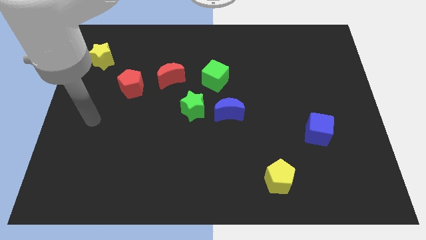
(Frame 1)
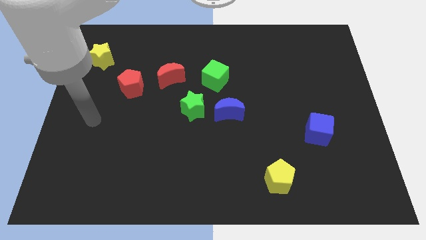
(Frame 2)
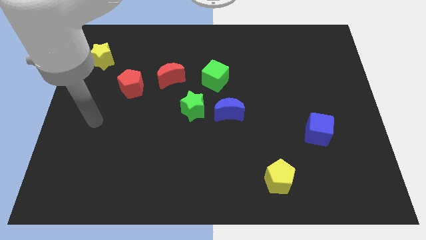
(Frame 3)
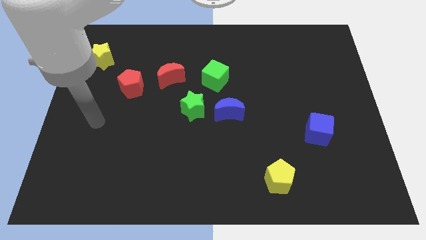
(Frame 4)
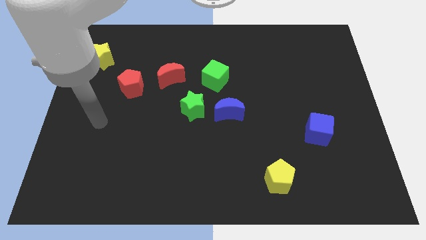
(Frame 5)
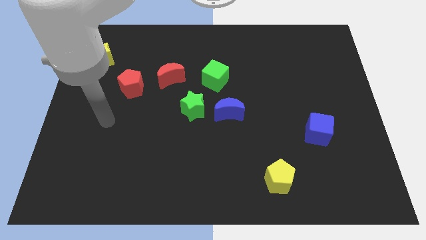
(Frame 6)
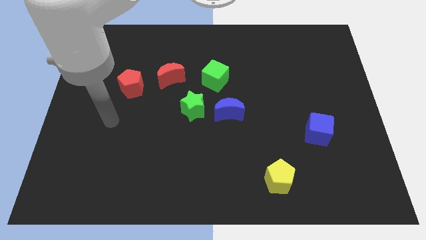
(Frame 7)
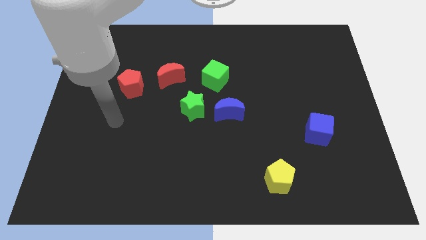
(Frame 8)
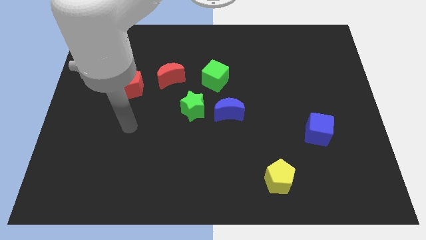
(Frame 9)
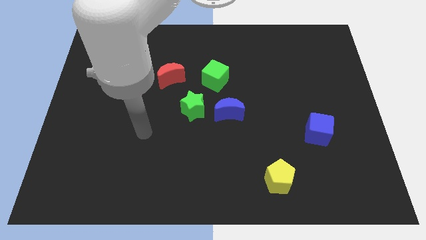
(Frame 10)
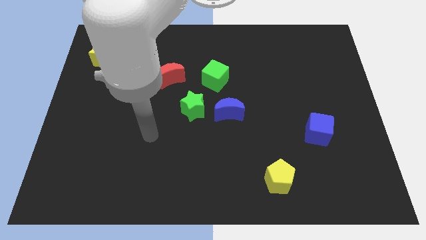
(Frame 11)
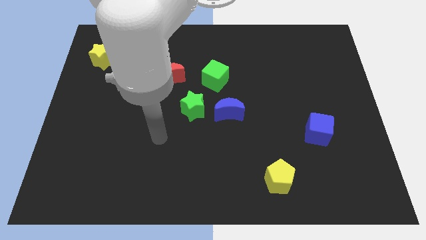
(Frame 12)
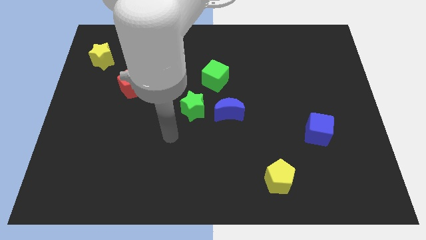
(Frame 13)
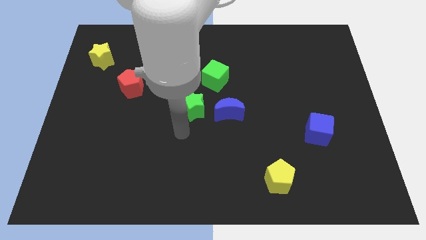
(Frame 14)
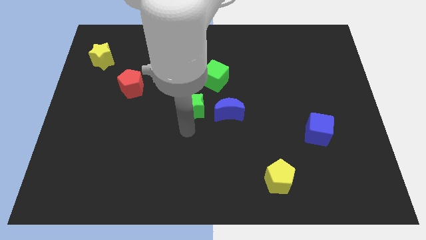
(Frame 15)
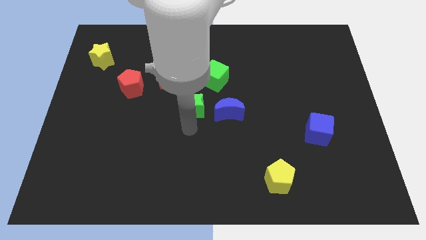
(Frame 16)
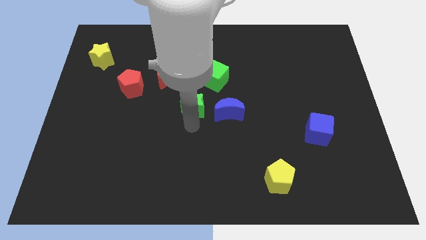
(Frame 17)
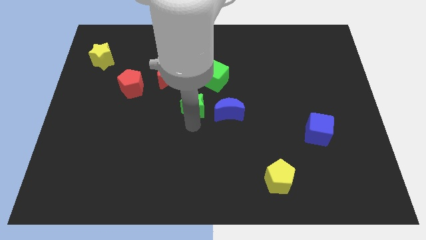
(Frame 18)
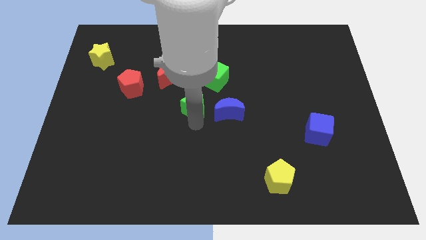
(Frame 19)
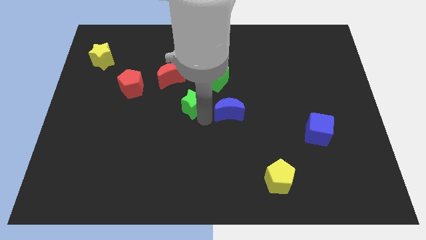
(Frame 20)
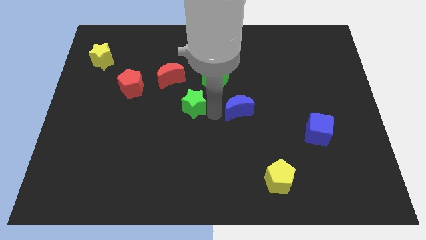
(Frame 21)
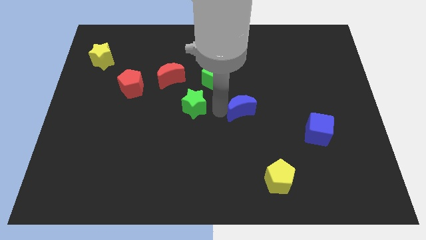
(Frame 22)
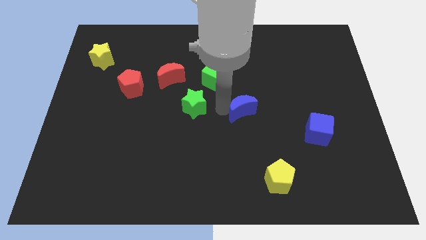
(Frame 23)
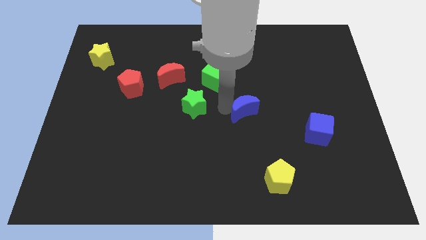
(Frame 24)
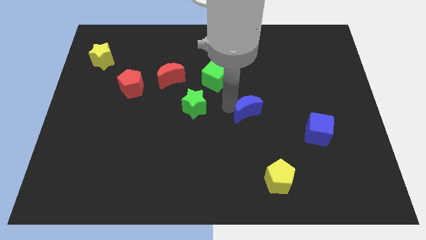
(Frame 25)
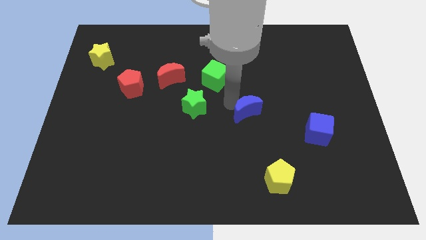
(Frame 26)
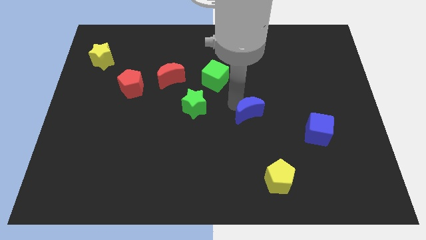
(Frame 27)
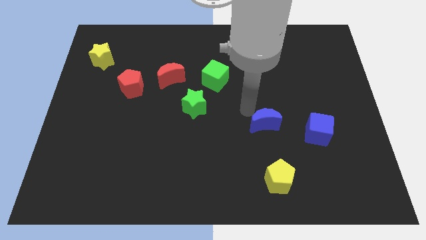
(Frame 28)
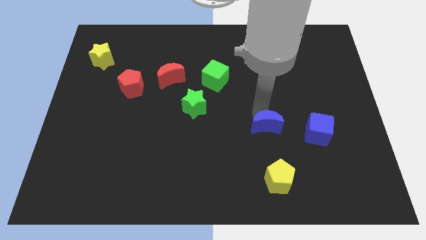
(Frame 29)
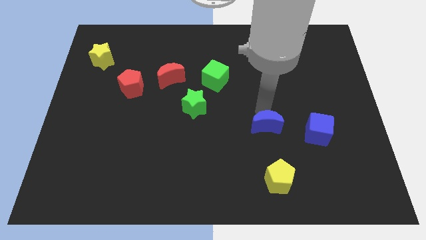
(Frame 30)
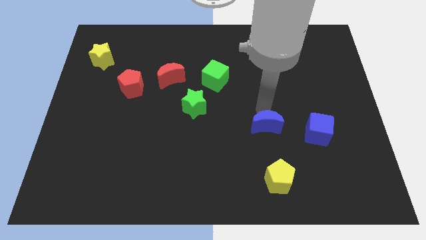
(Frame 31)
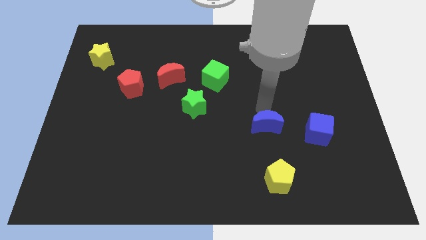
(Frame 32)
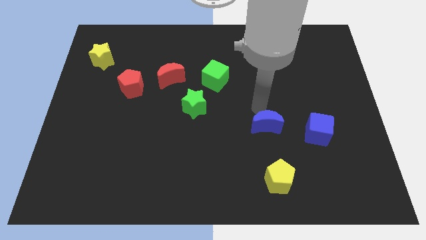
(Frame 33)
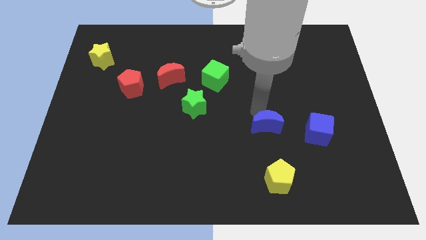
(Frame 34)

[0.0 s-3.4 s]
move blue crescent to the left of blue cube

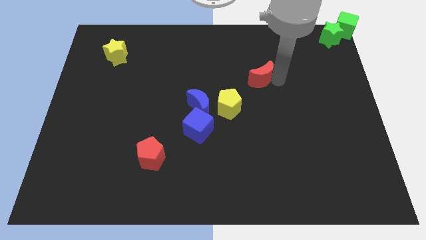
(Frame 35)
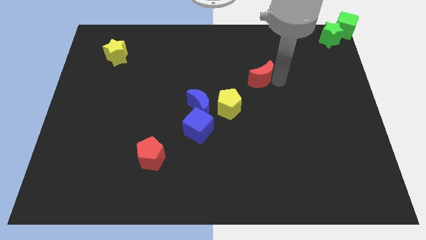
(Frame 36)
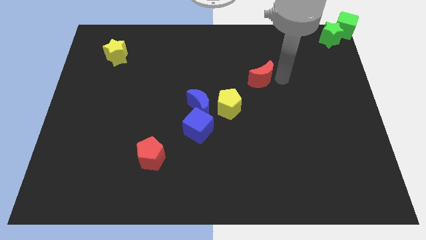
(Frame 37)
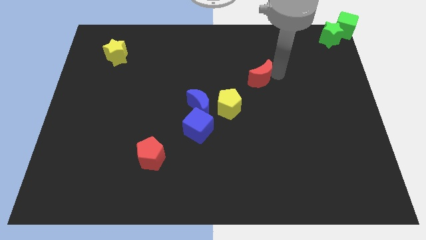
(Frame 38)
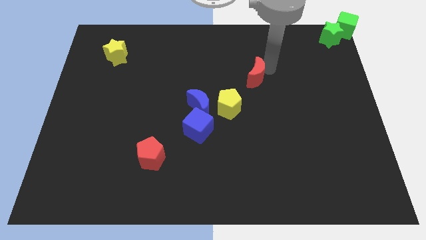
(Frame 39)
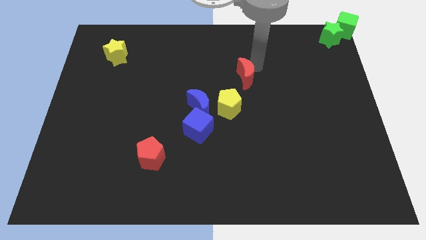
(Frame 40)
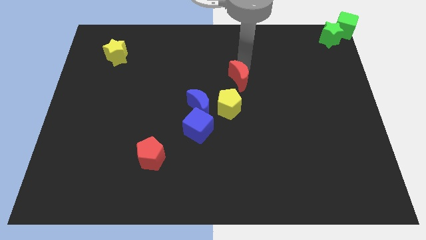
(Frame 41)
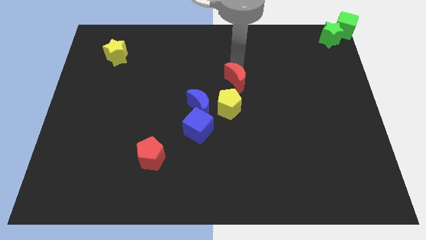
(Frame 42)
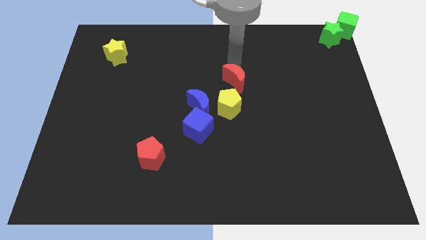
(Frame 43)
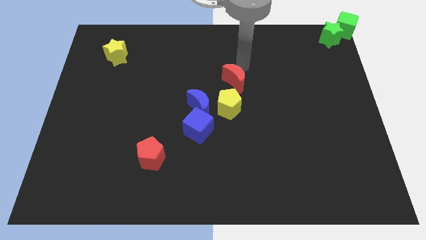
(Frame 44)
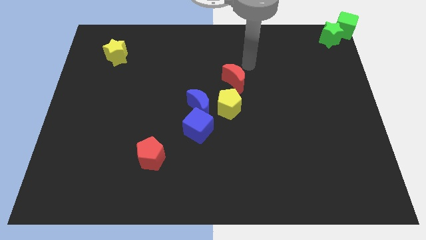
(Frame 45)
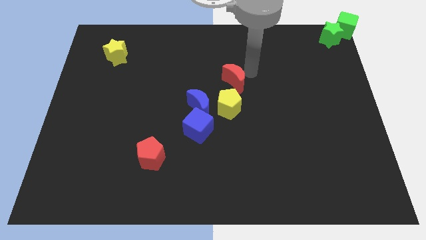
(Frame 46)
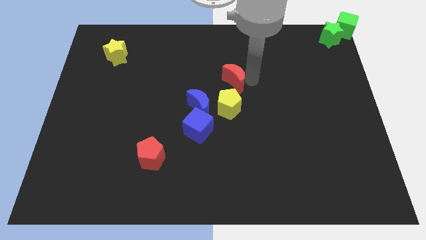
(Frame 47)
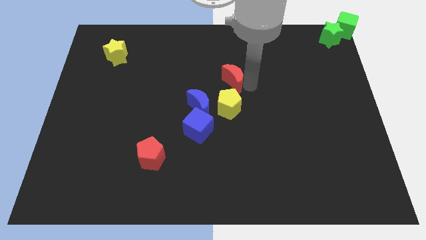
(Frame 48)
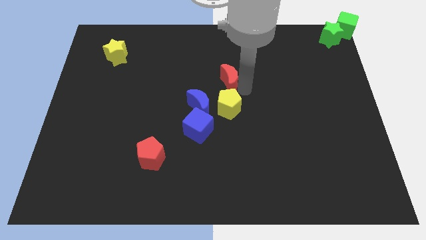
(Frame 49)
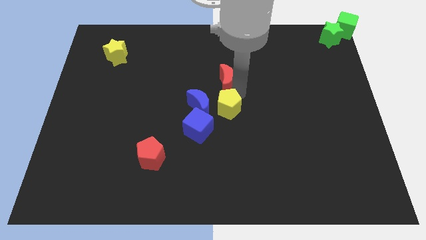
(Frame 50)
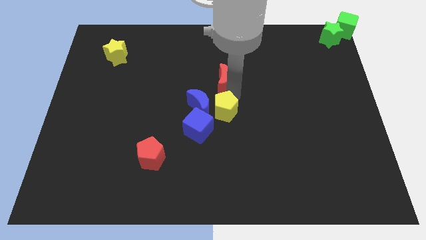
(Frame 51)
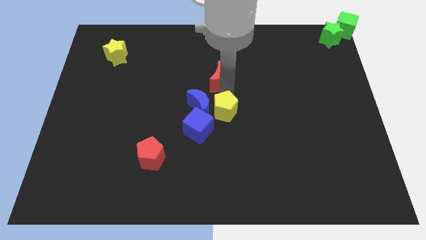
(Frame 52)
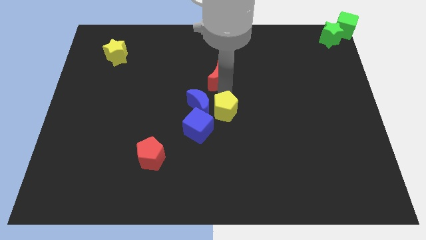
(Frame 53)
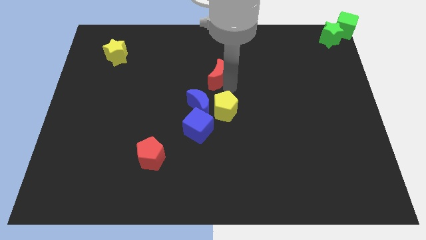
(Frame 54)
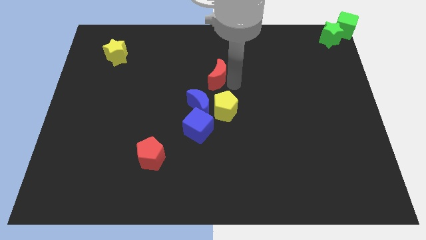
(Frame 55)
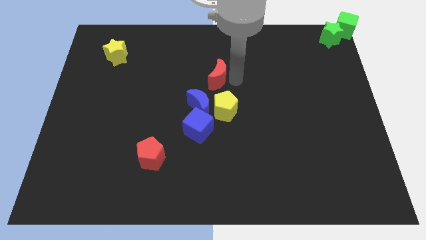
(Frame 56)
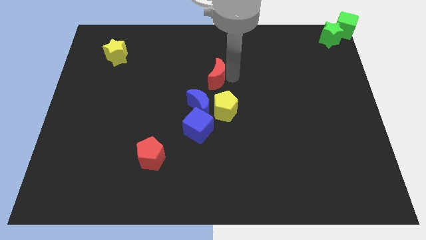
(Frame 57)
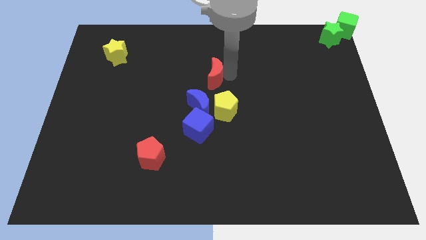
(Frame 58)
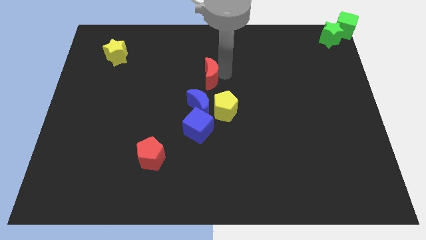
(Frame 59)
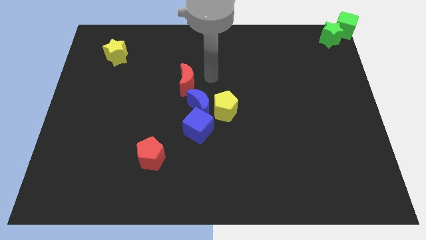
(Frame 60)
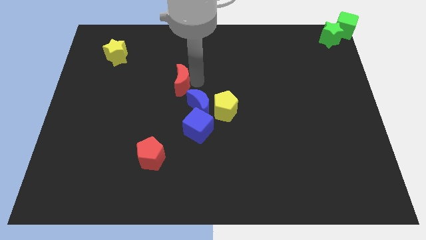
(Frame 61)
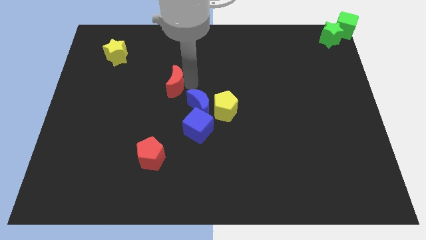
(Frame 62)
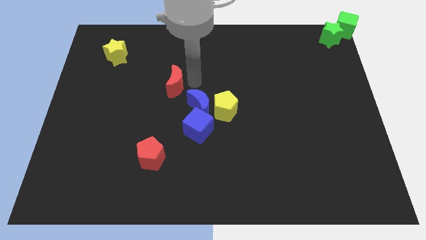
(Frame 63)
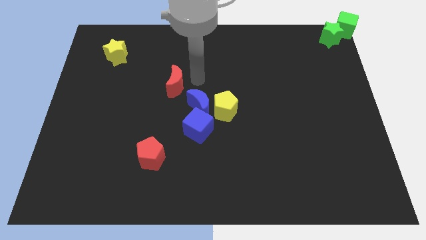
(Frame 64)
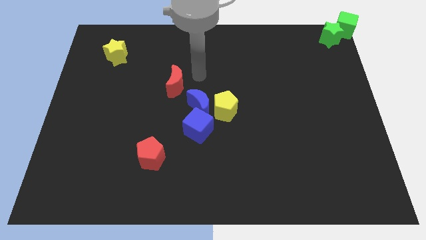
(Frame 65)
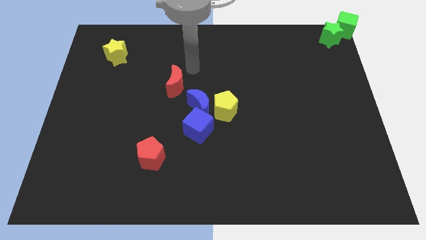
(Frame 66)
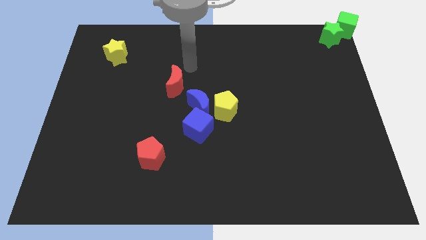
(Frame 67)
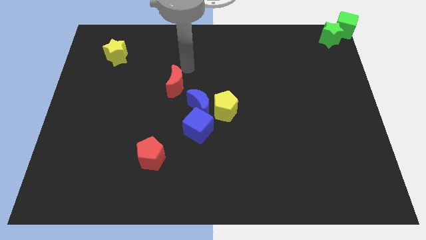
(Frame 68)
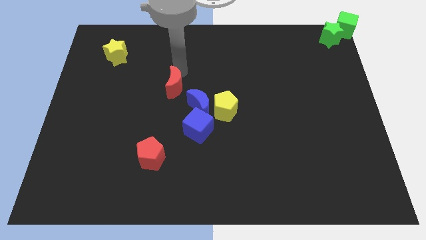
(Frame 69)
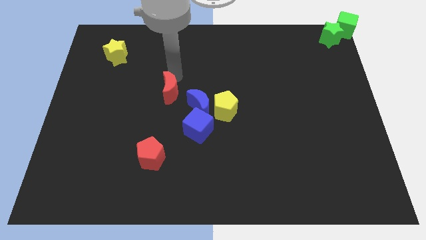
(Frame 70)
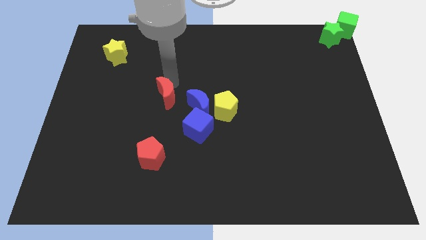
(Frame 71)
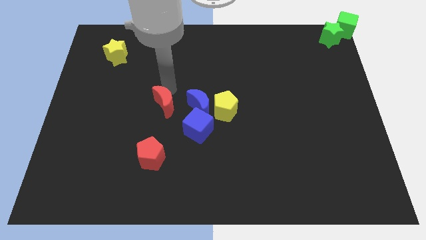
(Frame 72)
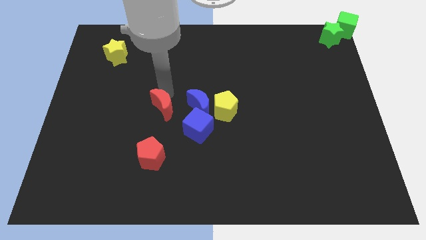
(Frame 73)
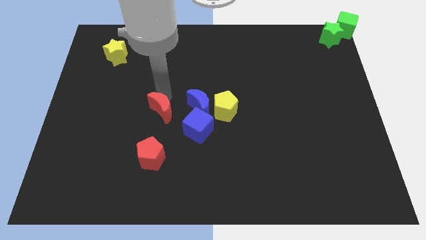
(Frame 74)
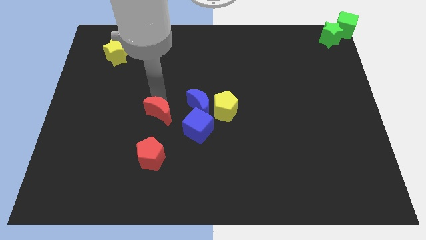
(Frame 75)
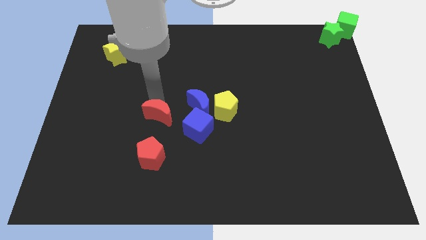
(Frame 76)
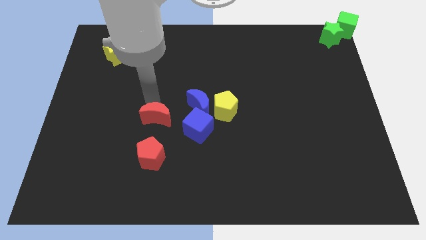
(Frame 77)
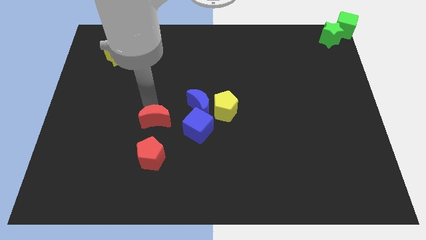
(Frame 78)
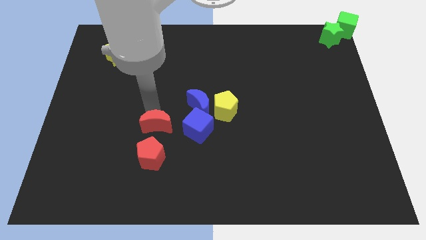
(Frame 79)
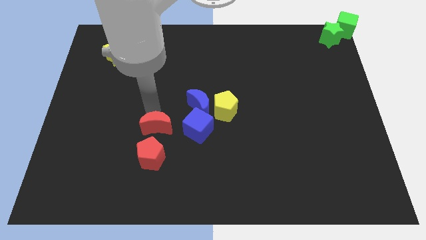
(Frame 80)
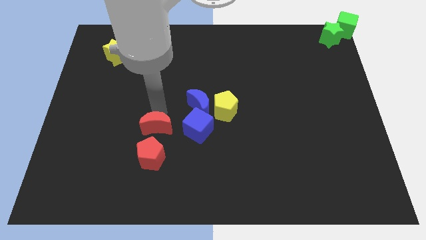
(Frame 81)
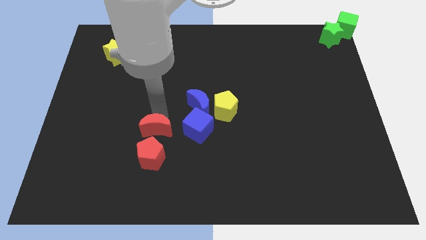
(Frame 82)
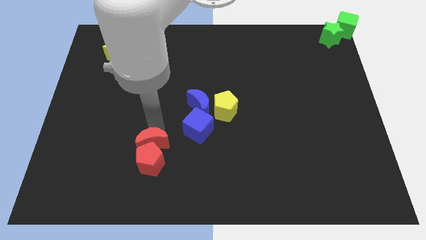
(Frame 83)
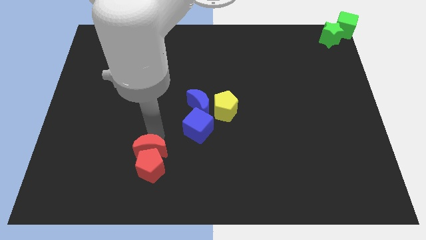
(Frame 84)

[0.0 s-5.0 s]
place red crescent to the top of red pentagon

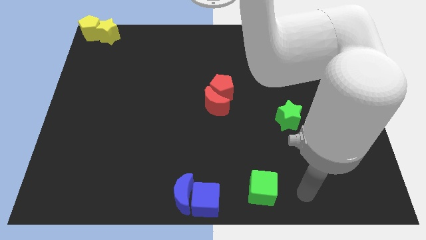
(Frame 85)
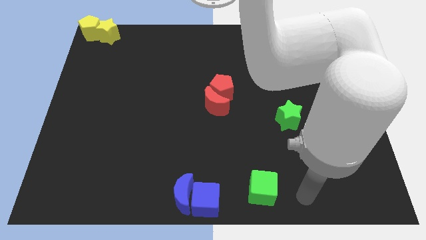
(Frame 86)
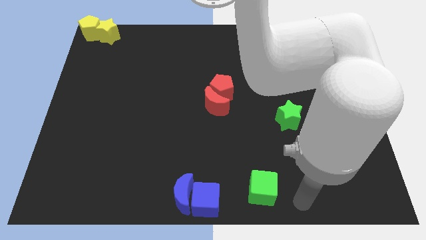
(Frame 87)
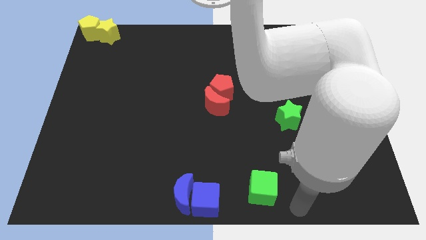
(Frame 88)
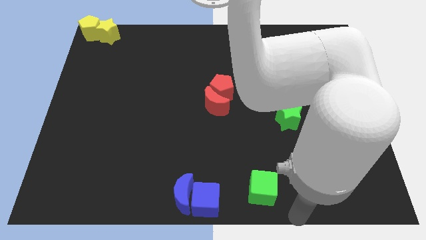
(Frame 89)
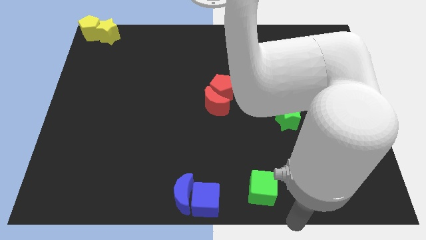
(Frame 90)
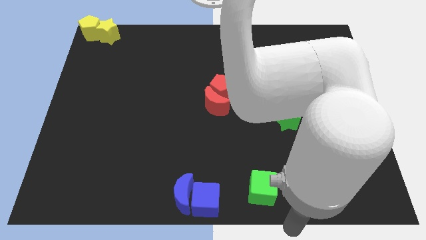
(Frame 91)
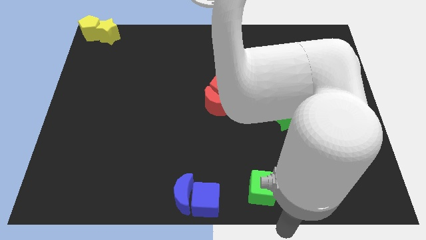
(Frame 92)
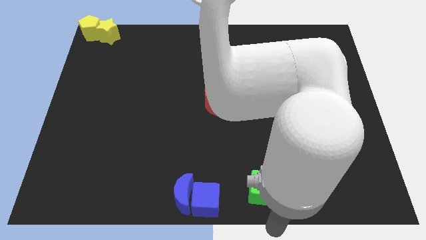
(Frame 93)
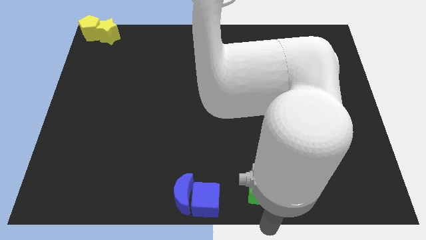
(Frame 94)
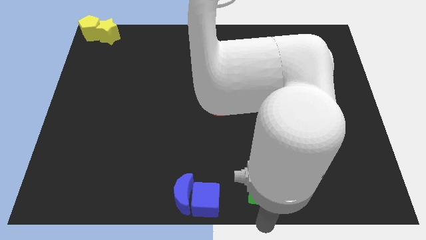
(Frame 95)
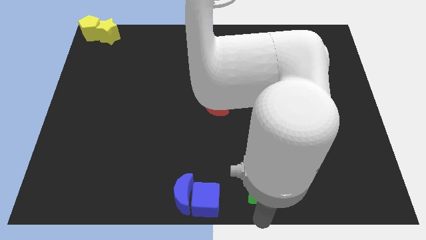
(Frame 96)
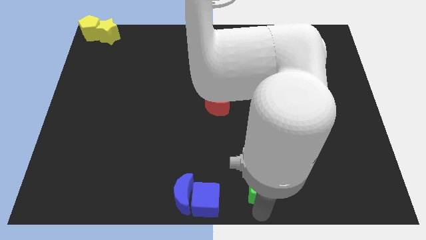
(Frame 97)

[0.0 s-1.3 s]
move your arm below the green cube
